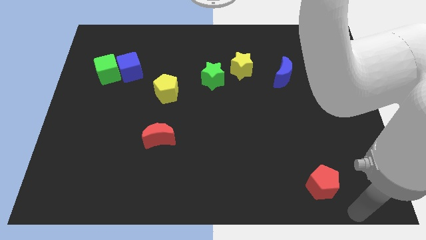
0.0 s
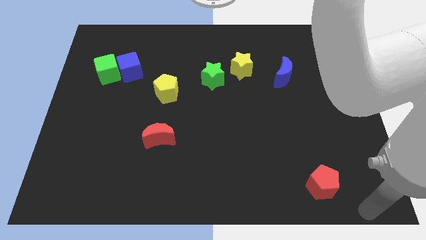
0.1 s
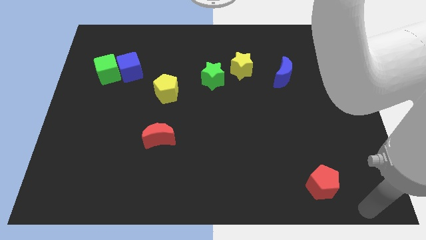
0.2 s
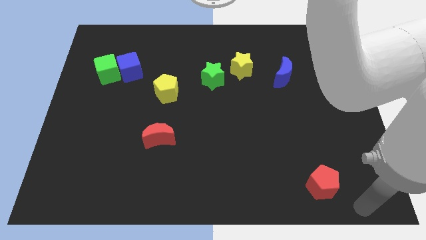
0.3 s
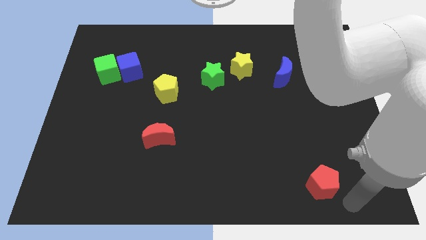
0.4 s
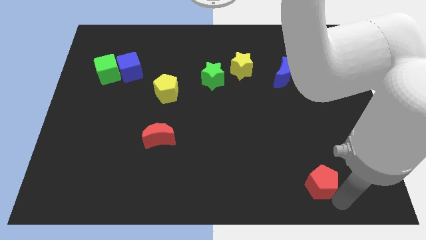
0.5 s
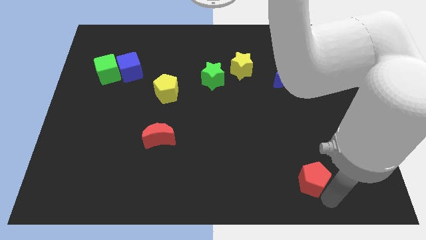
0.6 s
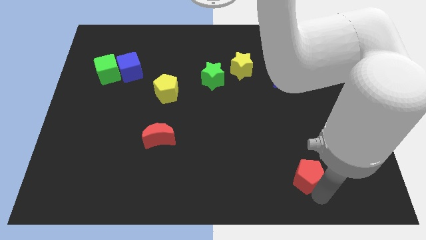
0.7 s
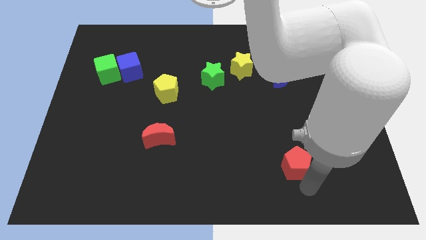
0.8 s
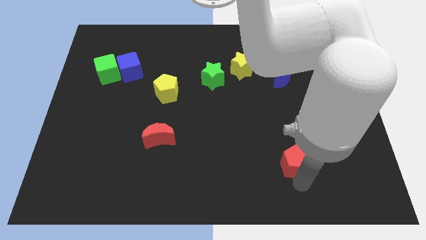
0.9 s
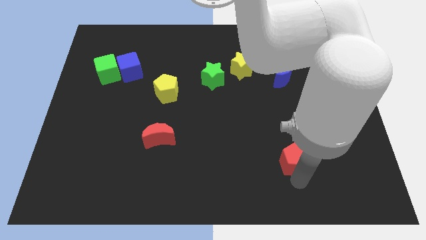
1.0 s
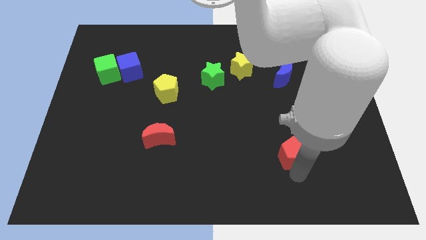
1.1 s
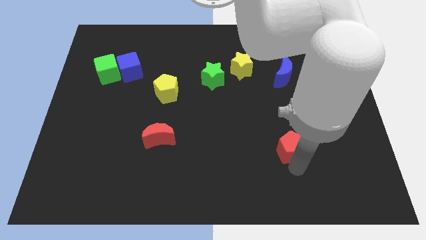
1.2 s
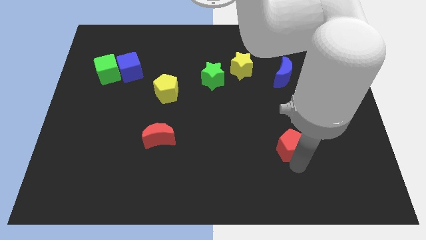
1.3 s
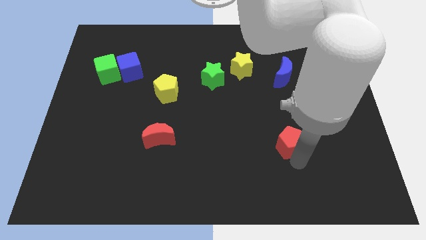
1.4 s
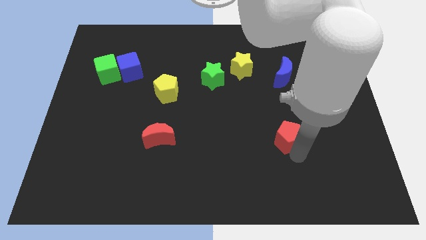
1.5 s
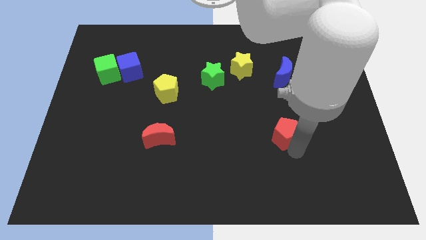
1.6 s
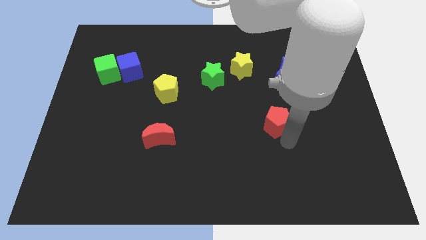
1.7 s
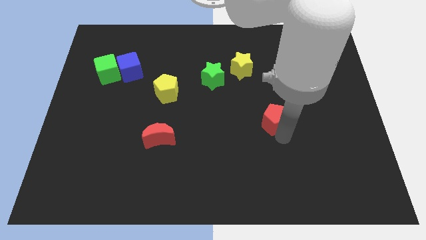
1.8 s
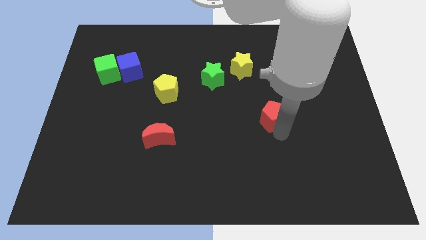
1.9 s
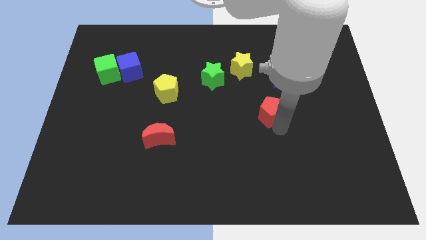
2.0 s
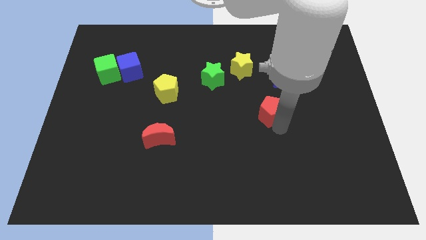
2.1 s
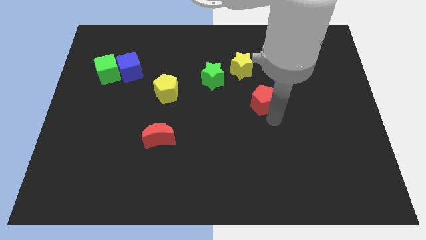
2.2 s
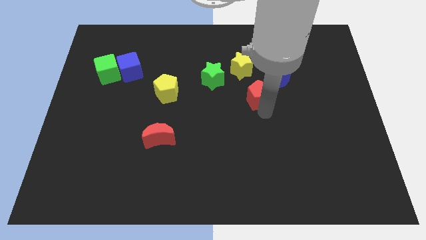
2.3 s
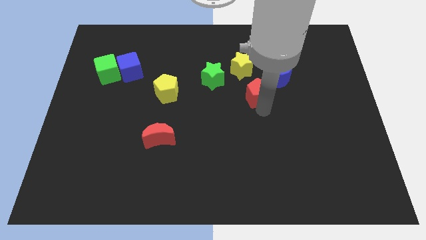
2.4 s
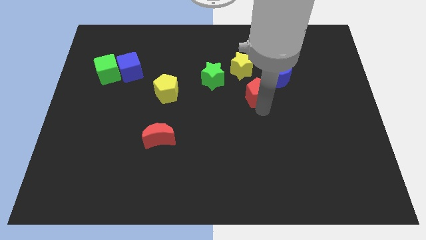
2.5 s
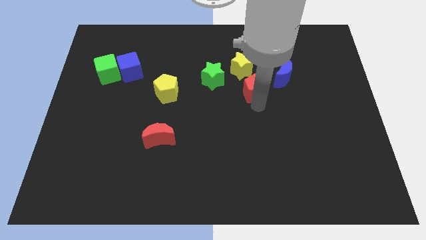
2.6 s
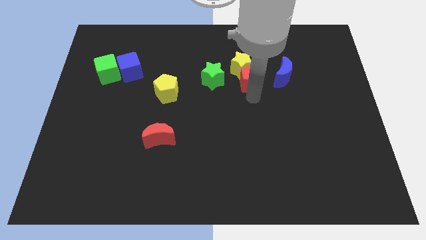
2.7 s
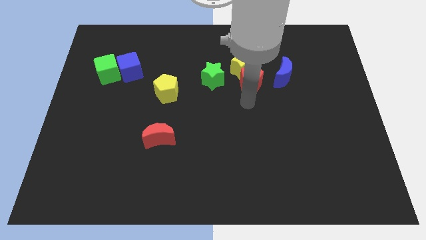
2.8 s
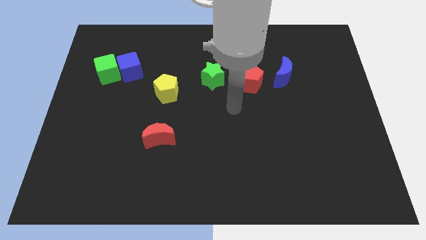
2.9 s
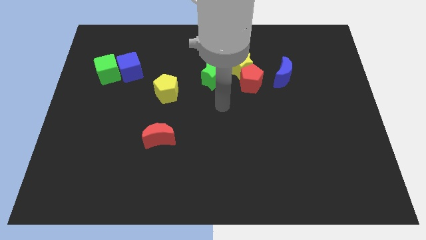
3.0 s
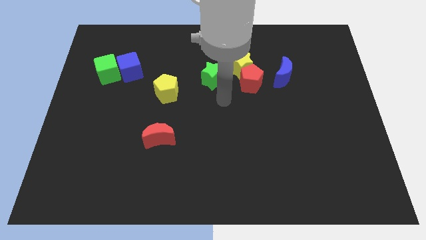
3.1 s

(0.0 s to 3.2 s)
put the red pentagon and the yellow star together

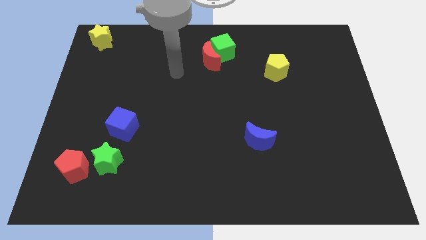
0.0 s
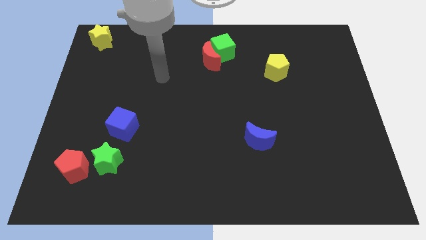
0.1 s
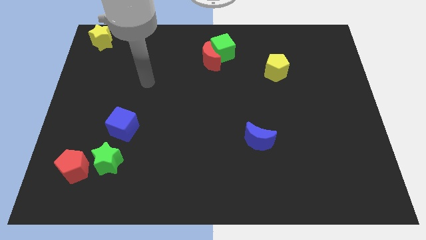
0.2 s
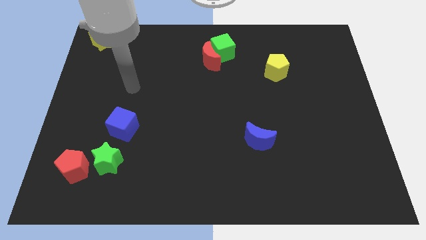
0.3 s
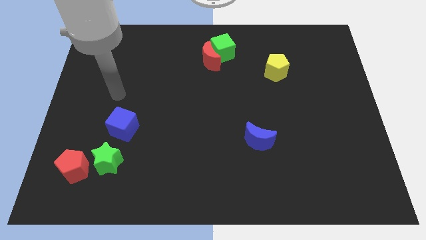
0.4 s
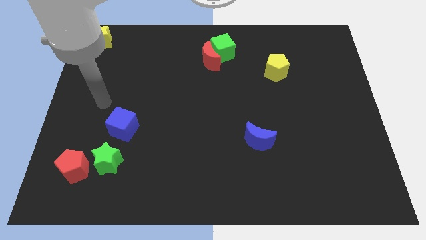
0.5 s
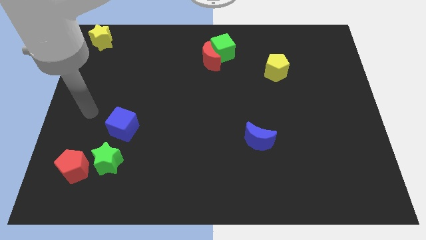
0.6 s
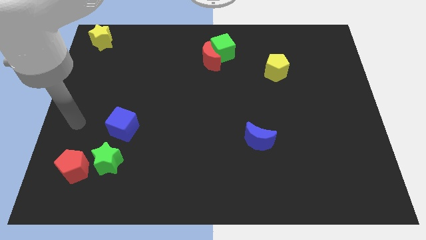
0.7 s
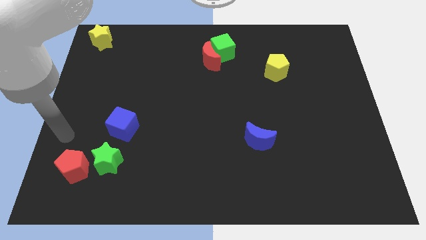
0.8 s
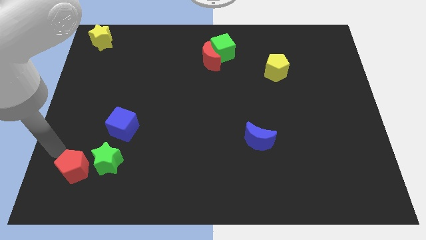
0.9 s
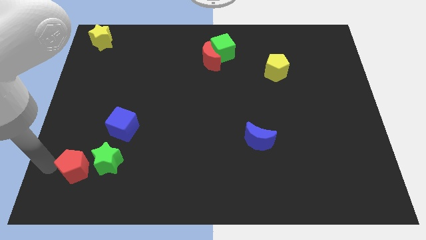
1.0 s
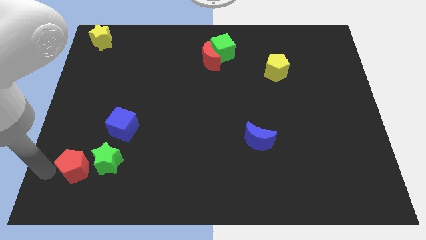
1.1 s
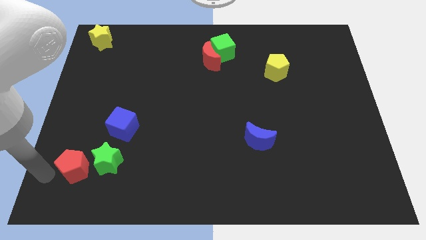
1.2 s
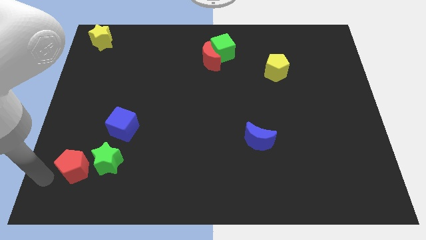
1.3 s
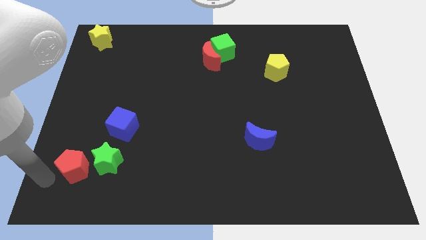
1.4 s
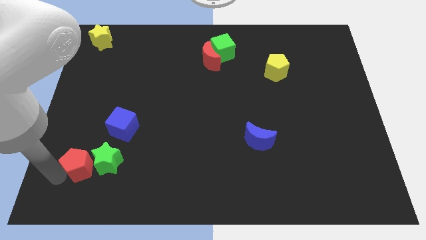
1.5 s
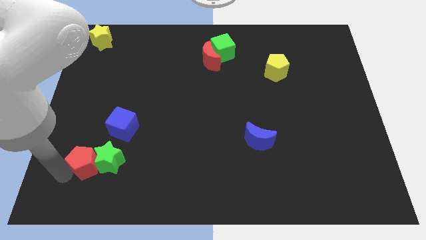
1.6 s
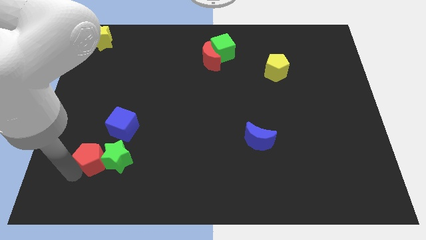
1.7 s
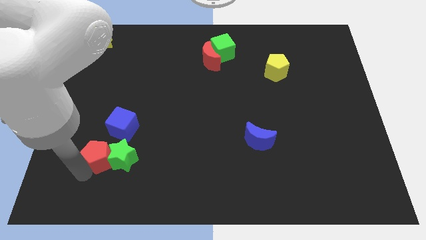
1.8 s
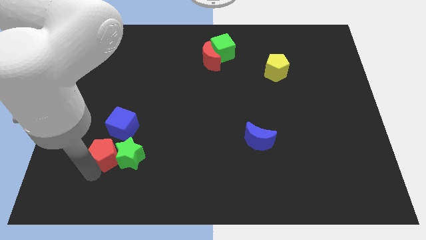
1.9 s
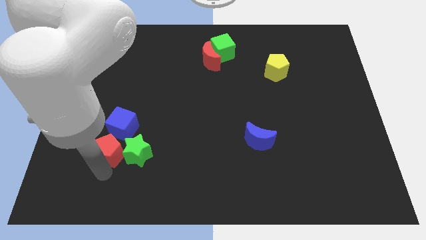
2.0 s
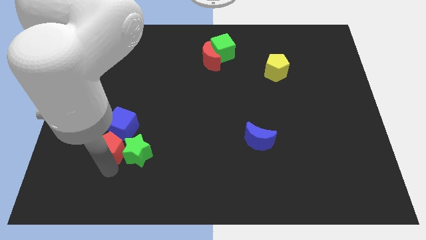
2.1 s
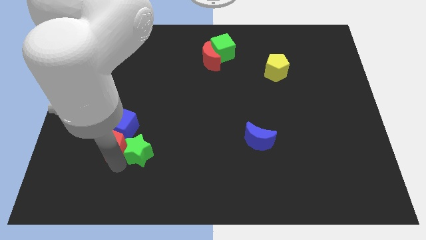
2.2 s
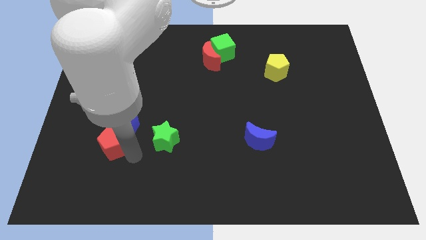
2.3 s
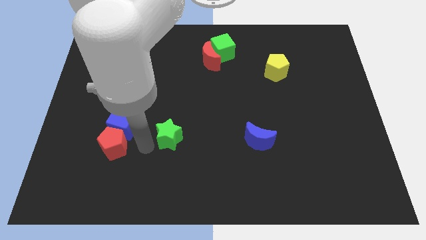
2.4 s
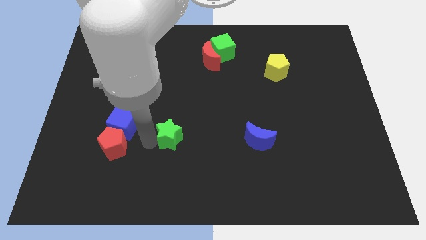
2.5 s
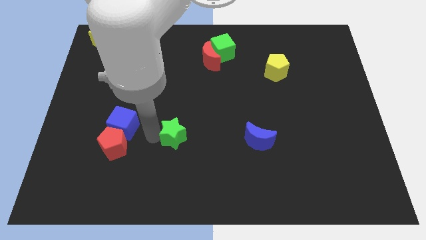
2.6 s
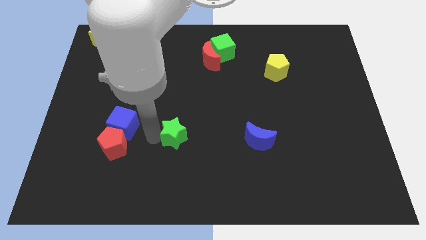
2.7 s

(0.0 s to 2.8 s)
push the red pentagon into the green star

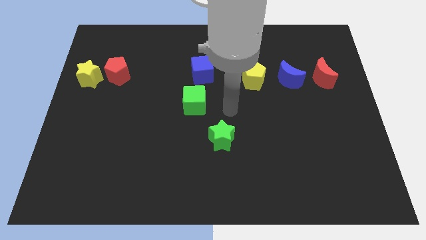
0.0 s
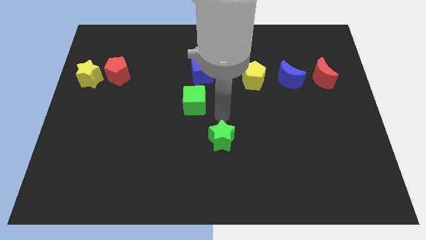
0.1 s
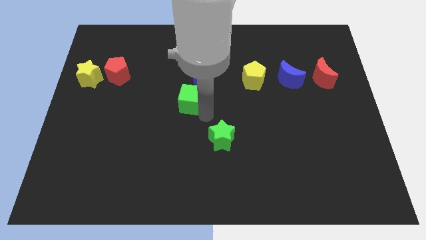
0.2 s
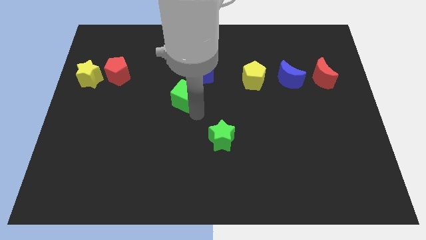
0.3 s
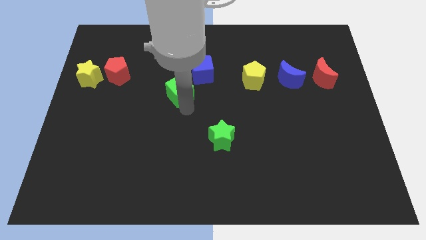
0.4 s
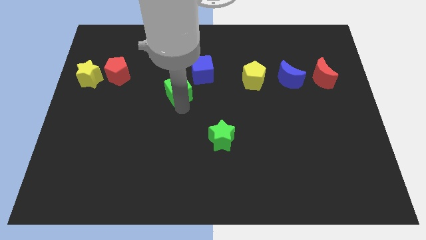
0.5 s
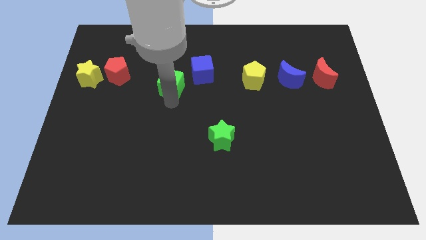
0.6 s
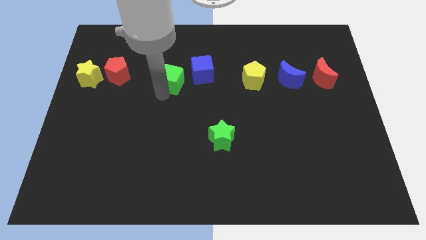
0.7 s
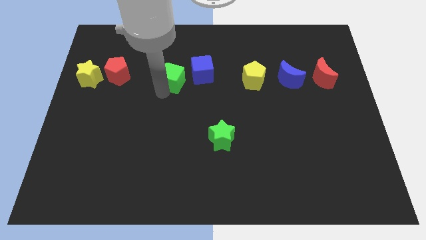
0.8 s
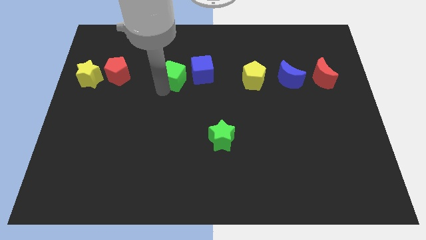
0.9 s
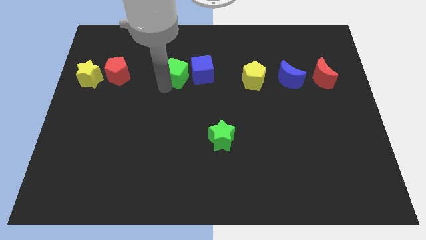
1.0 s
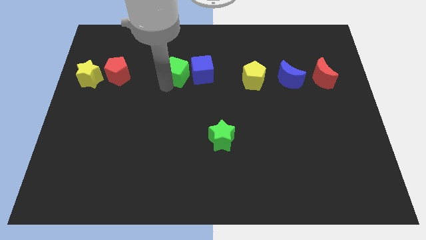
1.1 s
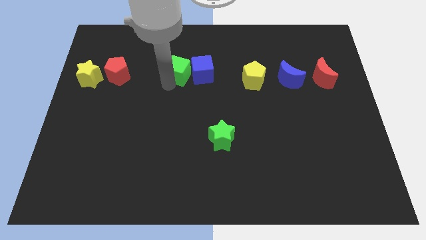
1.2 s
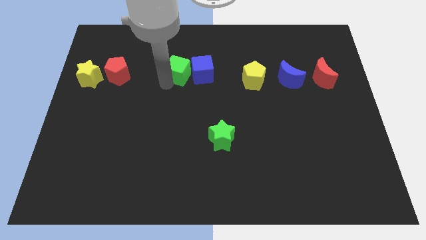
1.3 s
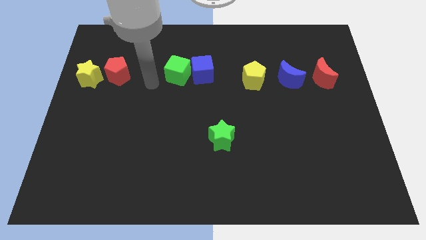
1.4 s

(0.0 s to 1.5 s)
make the green cube touch the left side of the blue cube

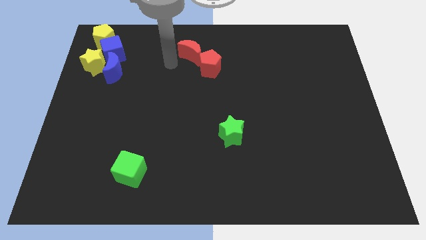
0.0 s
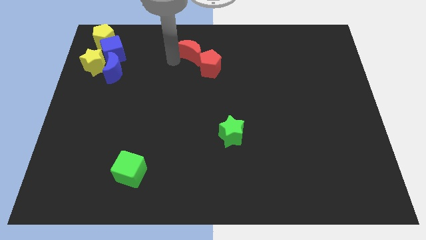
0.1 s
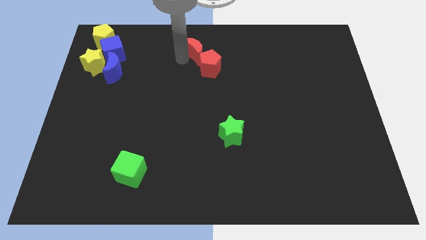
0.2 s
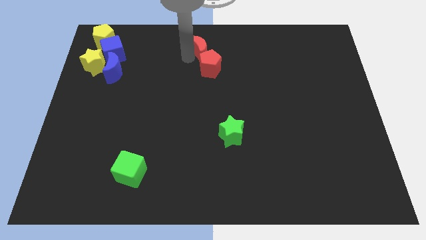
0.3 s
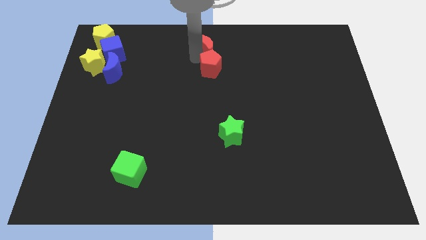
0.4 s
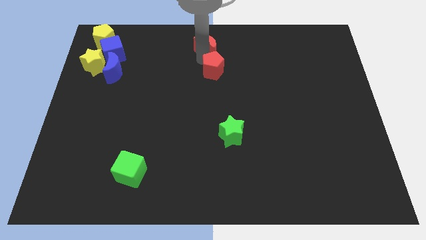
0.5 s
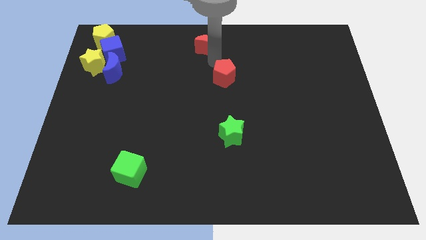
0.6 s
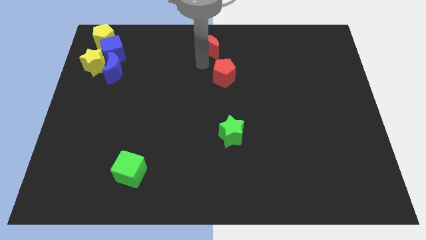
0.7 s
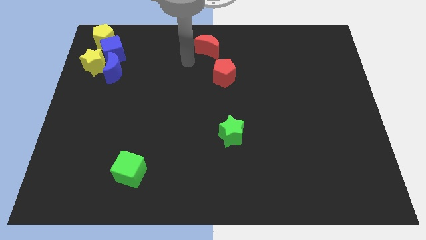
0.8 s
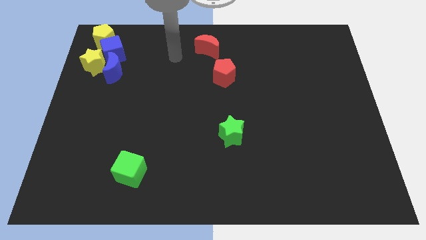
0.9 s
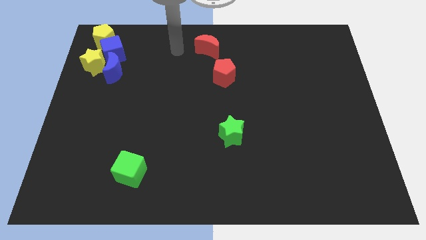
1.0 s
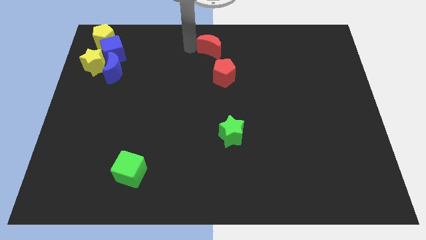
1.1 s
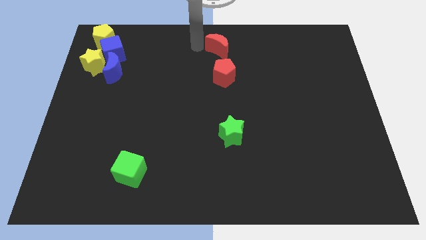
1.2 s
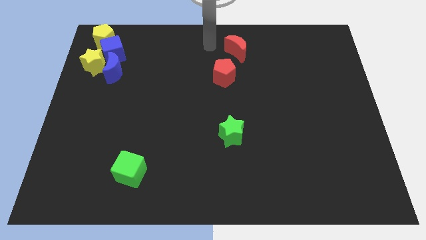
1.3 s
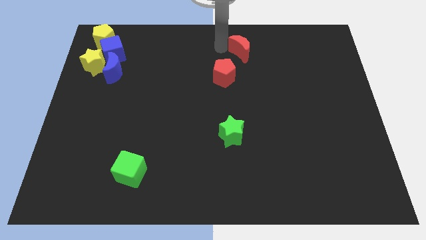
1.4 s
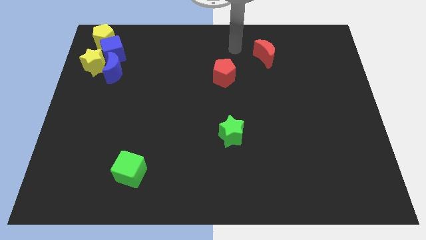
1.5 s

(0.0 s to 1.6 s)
separate the red blocks
